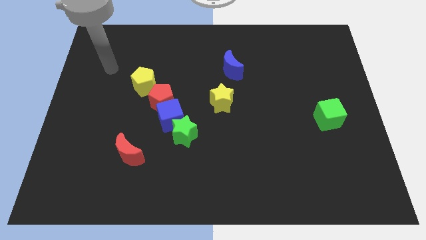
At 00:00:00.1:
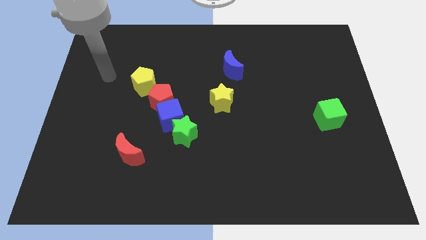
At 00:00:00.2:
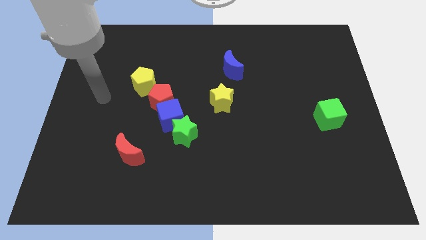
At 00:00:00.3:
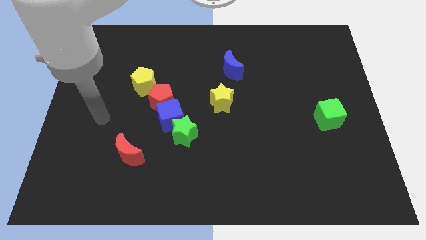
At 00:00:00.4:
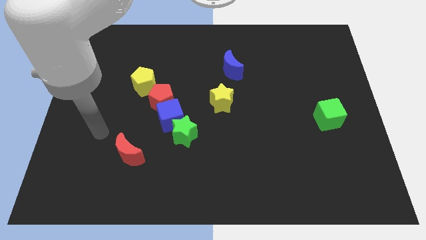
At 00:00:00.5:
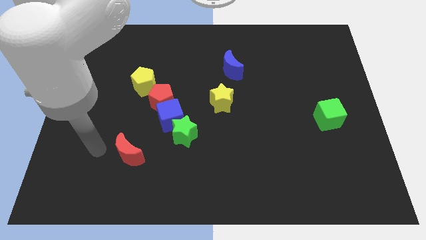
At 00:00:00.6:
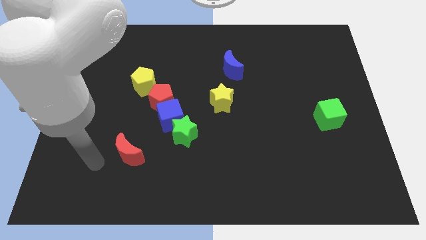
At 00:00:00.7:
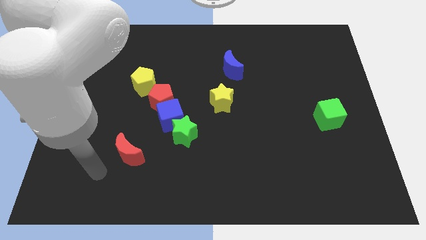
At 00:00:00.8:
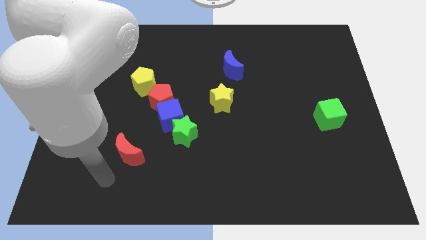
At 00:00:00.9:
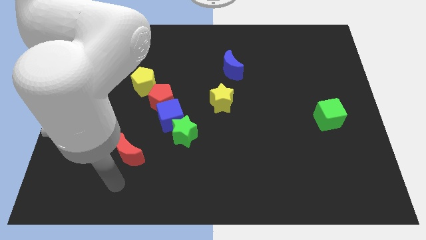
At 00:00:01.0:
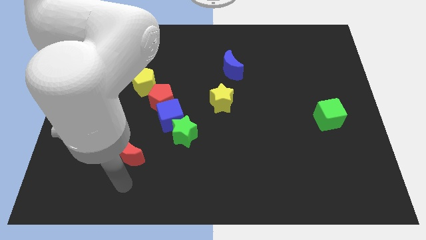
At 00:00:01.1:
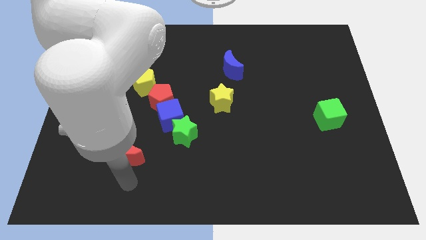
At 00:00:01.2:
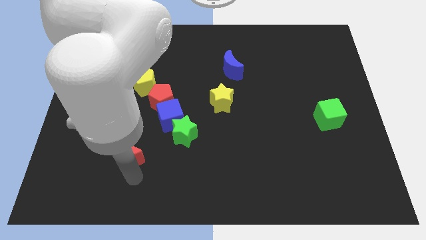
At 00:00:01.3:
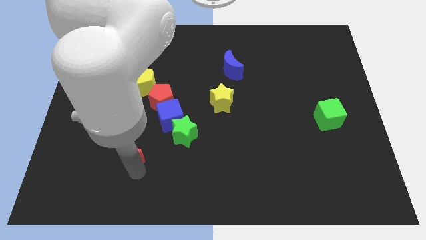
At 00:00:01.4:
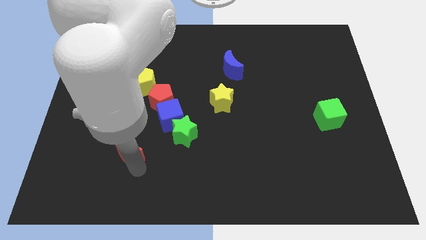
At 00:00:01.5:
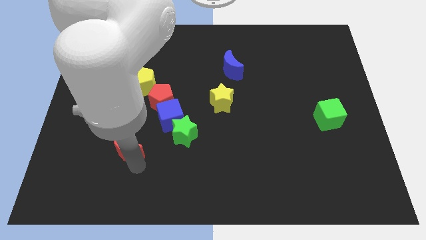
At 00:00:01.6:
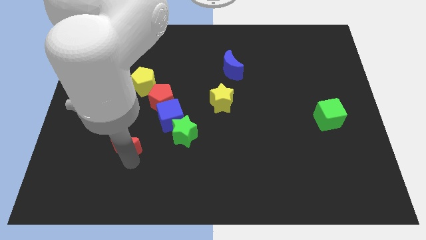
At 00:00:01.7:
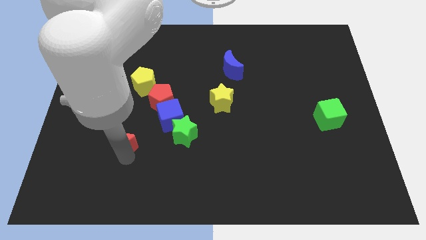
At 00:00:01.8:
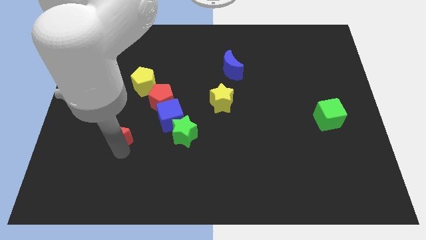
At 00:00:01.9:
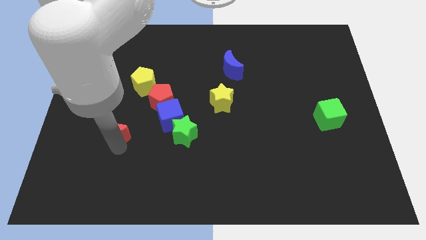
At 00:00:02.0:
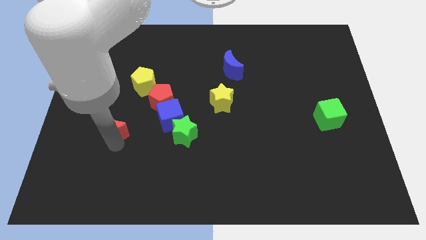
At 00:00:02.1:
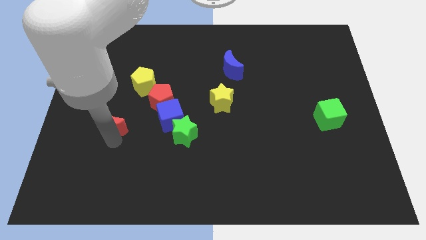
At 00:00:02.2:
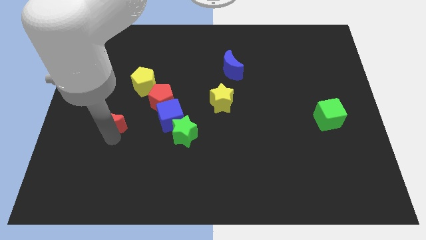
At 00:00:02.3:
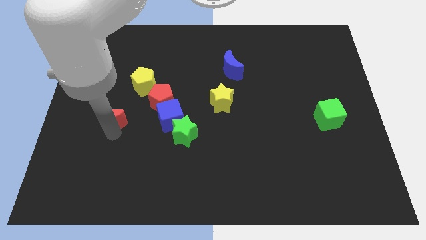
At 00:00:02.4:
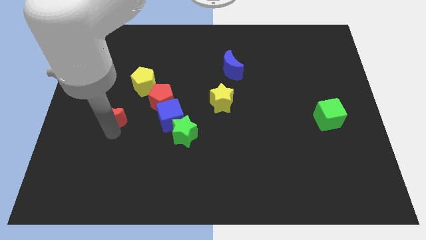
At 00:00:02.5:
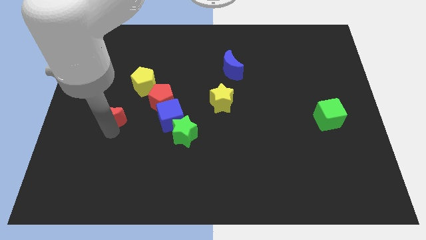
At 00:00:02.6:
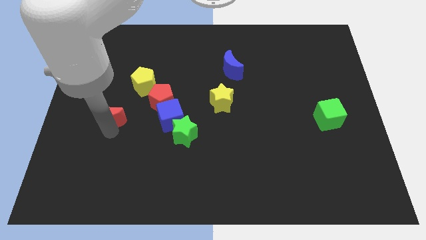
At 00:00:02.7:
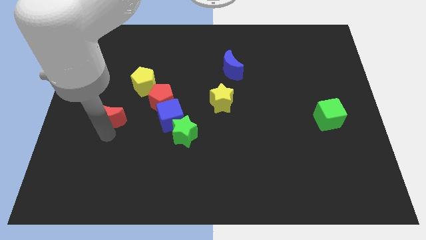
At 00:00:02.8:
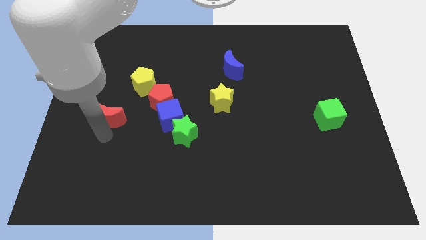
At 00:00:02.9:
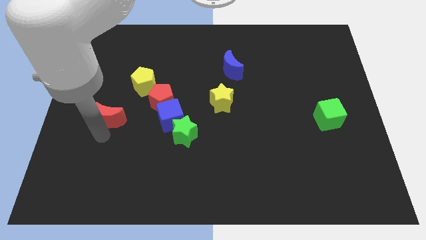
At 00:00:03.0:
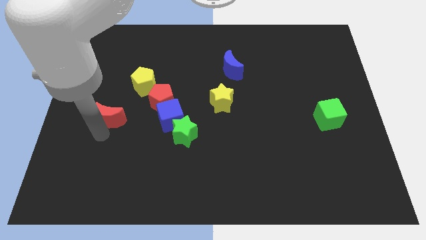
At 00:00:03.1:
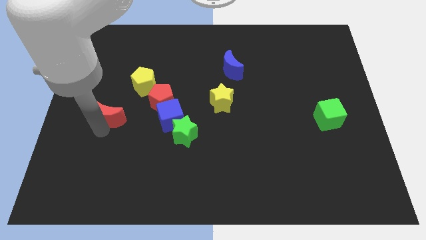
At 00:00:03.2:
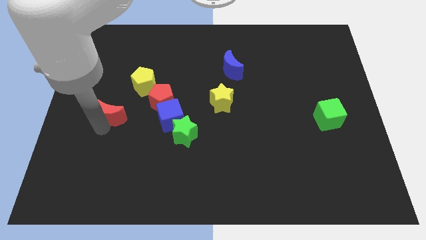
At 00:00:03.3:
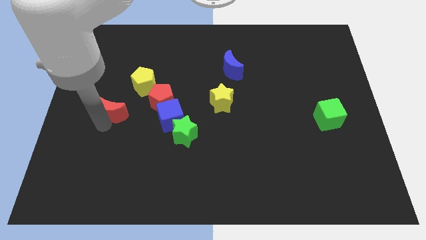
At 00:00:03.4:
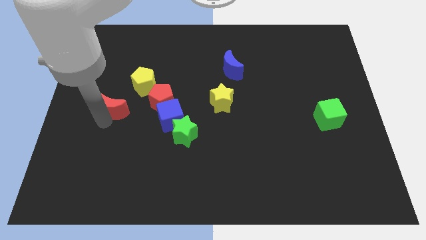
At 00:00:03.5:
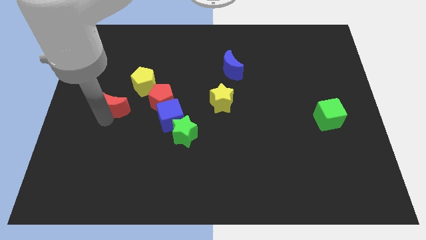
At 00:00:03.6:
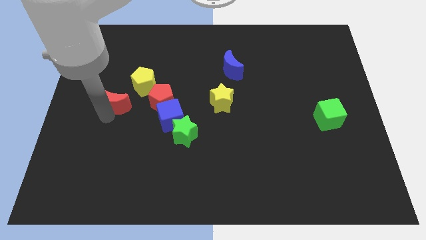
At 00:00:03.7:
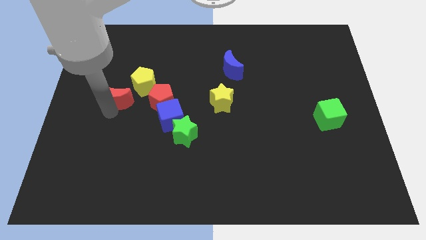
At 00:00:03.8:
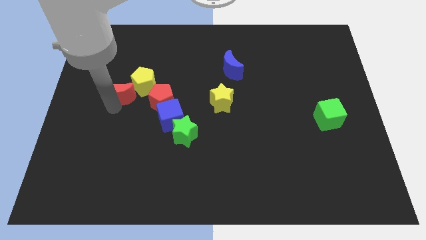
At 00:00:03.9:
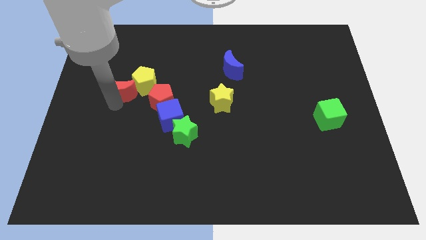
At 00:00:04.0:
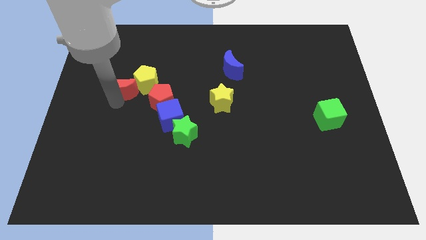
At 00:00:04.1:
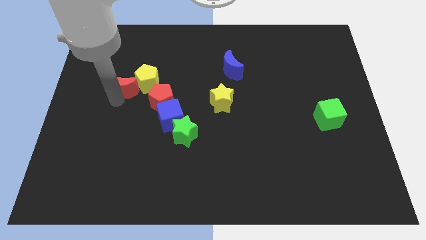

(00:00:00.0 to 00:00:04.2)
move the red moon to the yellow pentagon

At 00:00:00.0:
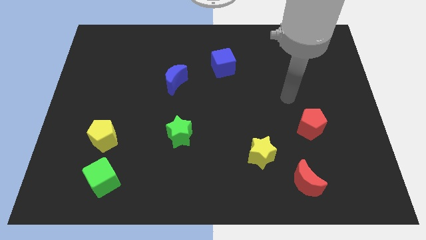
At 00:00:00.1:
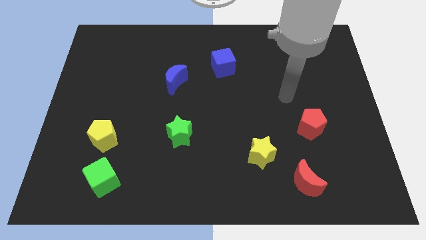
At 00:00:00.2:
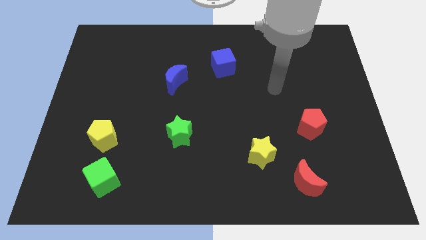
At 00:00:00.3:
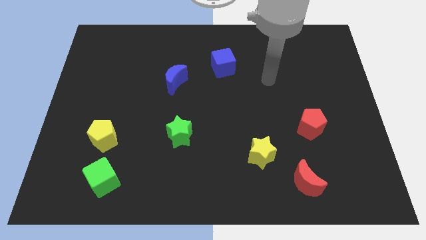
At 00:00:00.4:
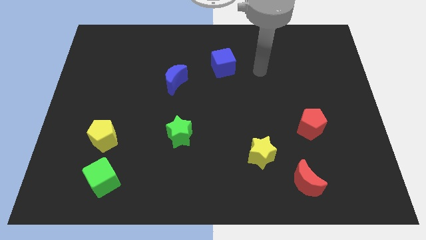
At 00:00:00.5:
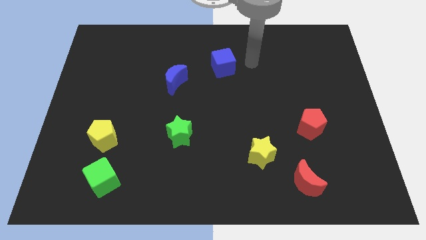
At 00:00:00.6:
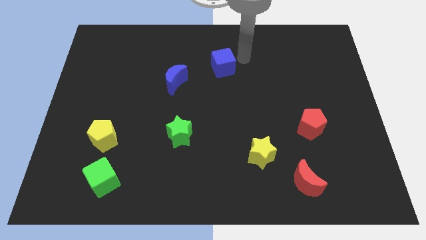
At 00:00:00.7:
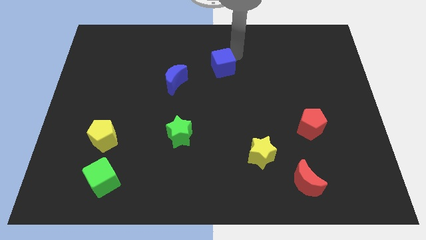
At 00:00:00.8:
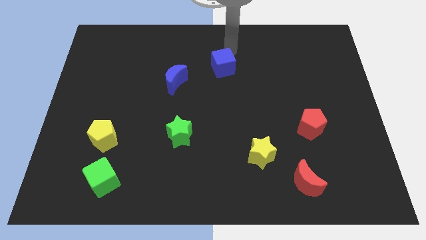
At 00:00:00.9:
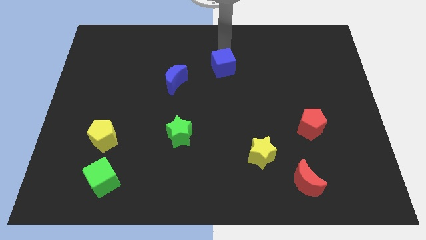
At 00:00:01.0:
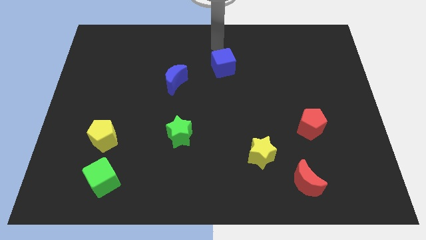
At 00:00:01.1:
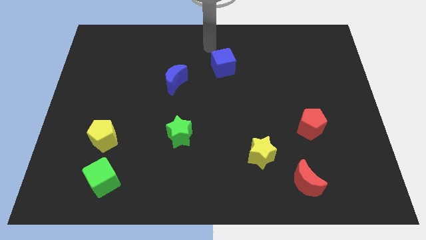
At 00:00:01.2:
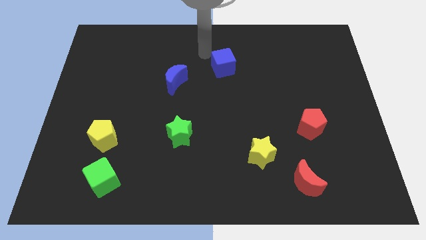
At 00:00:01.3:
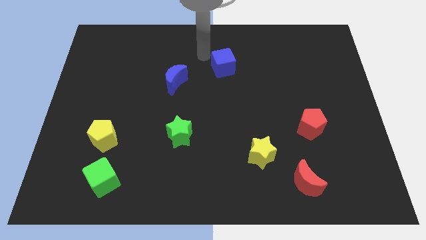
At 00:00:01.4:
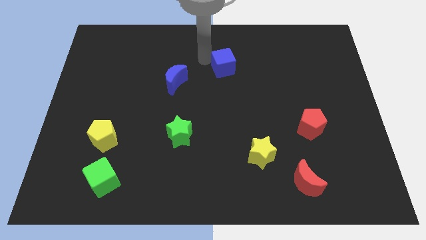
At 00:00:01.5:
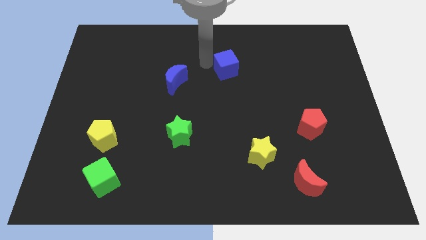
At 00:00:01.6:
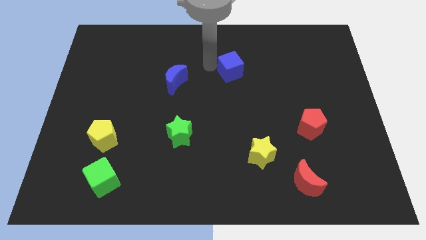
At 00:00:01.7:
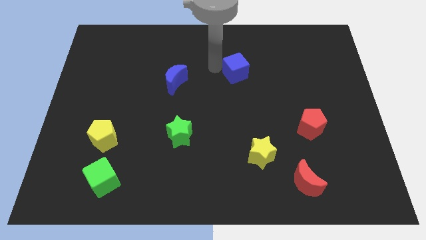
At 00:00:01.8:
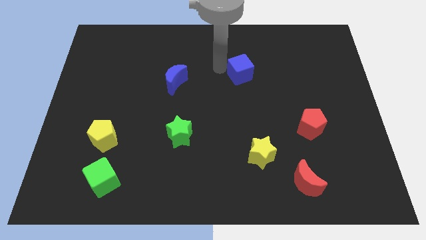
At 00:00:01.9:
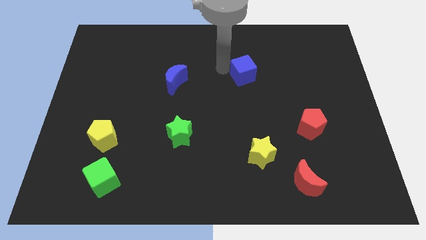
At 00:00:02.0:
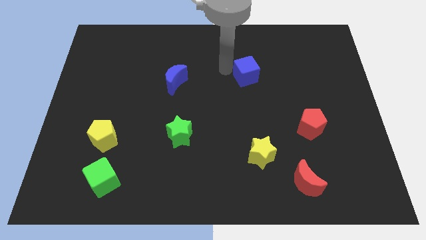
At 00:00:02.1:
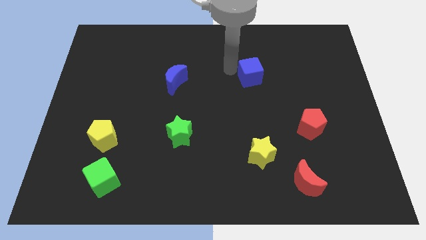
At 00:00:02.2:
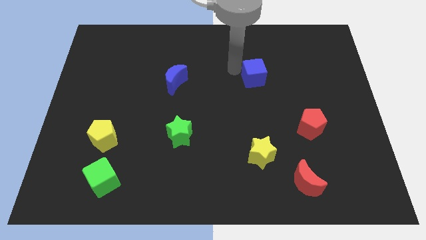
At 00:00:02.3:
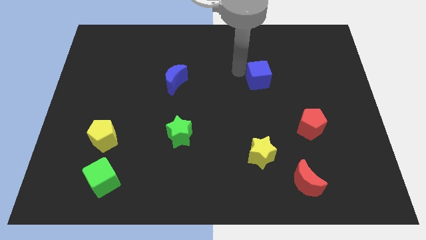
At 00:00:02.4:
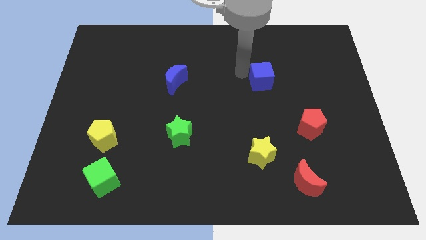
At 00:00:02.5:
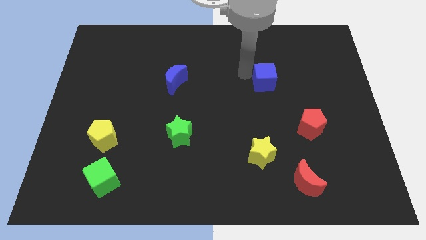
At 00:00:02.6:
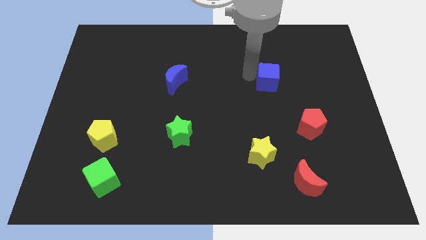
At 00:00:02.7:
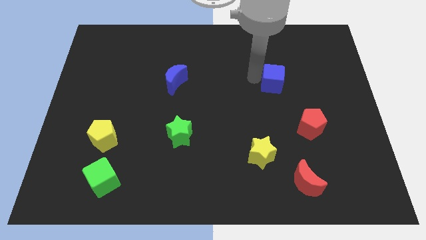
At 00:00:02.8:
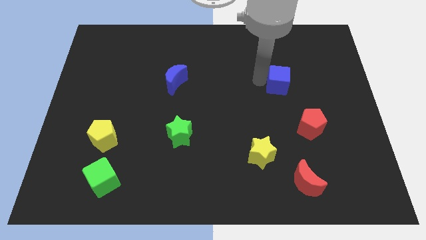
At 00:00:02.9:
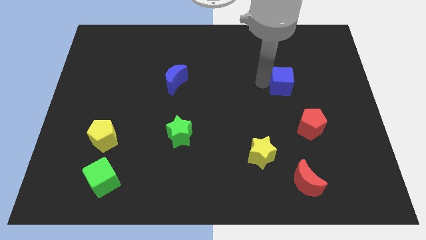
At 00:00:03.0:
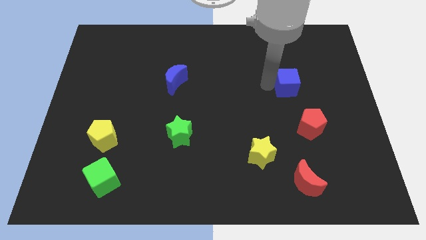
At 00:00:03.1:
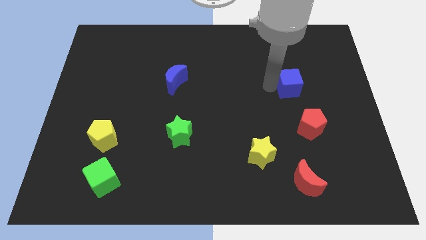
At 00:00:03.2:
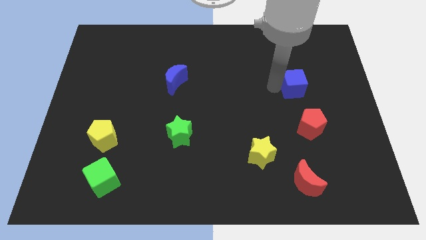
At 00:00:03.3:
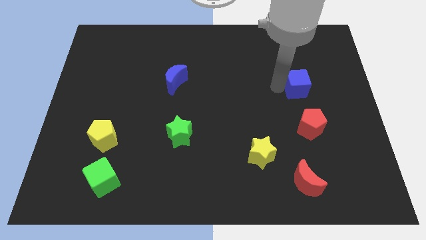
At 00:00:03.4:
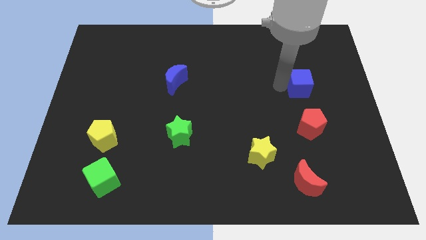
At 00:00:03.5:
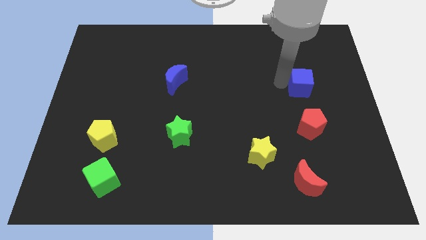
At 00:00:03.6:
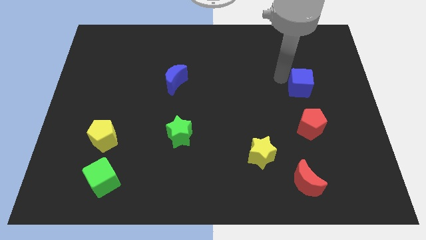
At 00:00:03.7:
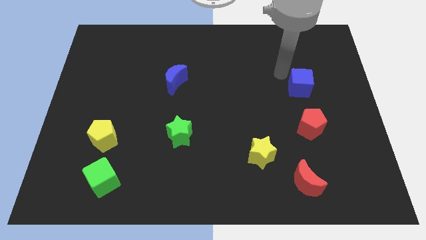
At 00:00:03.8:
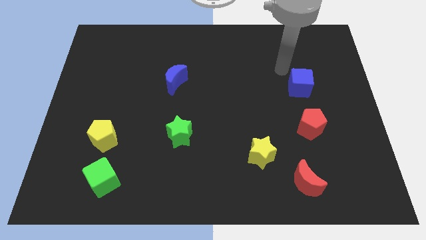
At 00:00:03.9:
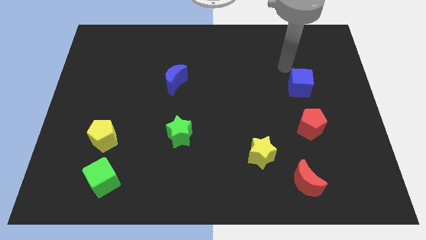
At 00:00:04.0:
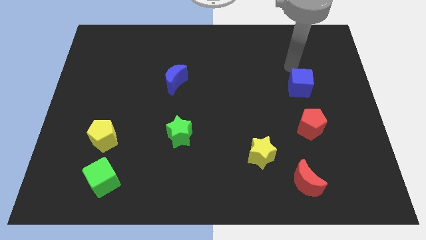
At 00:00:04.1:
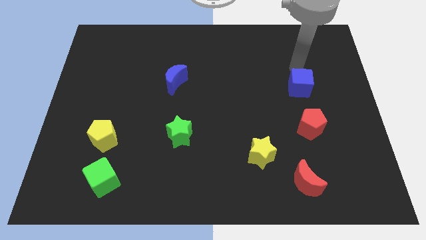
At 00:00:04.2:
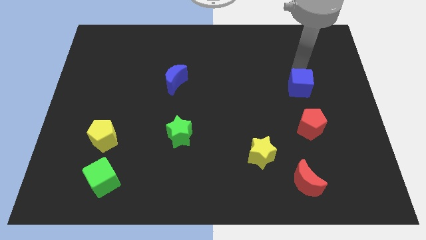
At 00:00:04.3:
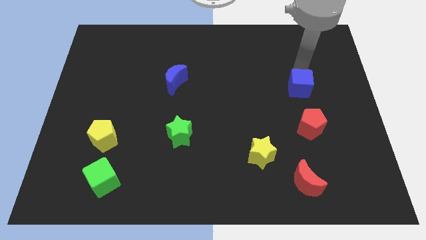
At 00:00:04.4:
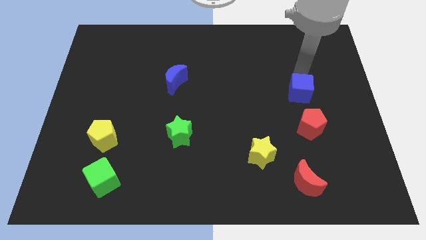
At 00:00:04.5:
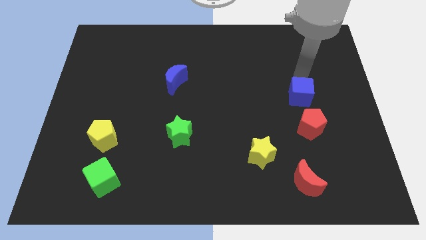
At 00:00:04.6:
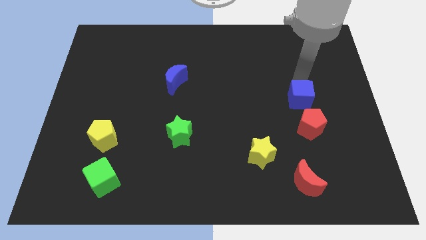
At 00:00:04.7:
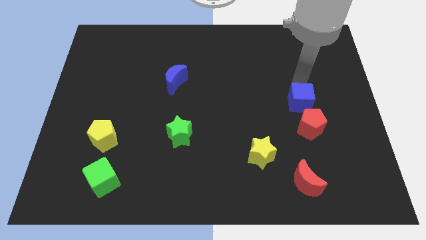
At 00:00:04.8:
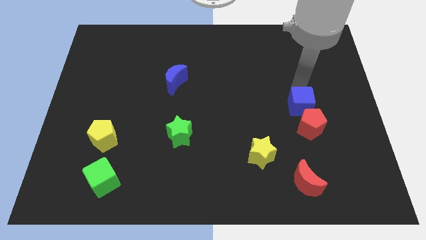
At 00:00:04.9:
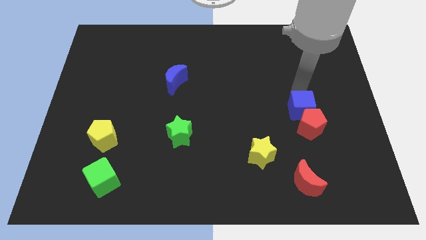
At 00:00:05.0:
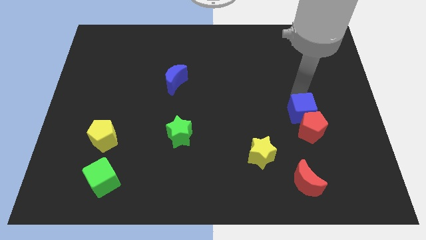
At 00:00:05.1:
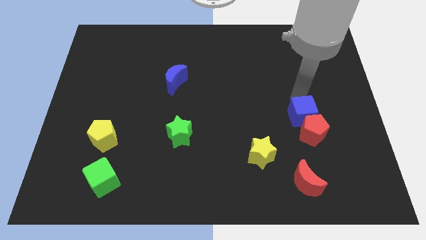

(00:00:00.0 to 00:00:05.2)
slide the blue cube towards the red pentagon
